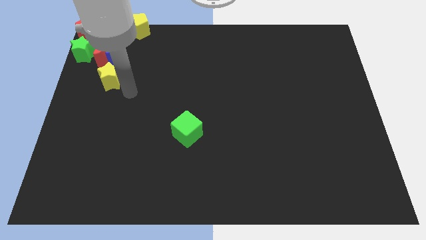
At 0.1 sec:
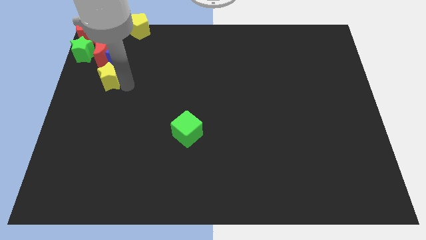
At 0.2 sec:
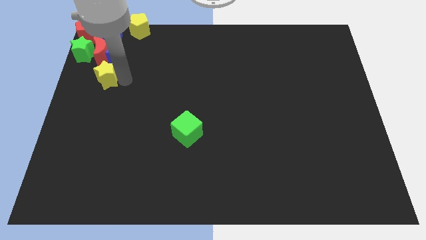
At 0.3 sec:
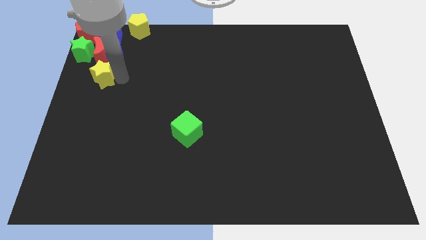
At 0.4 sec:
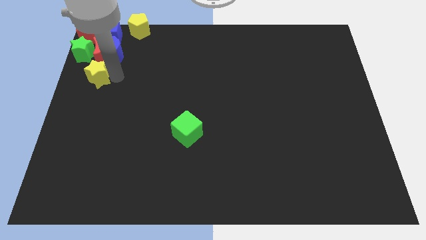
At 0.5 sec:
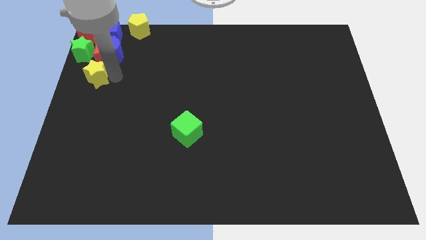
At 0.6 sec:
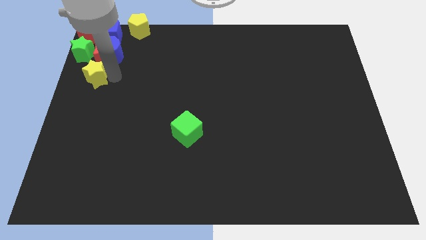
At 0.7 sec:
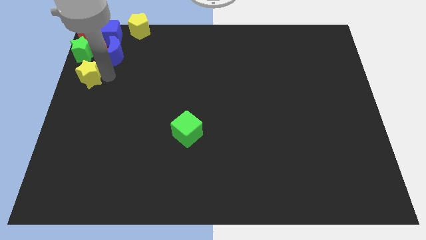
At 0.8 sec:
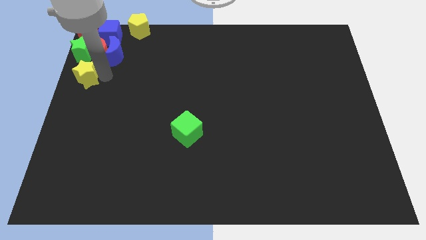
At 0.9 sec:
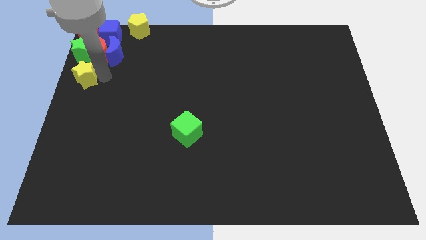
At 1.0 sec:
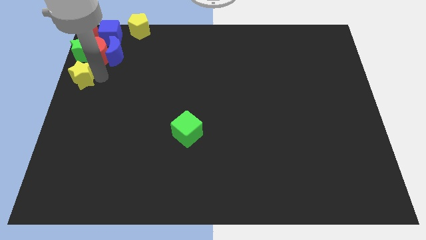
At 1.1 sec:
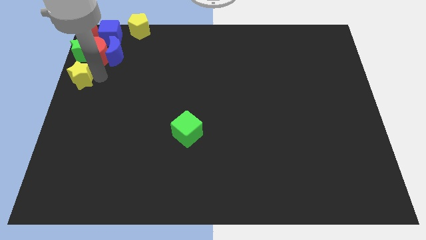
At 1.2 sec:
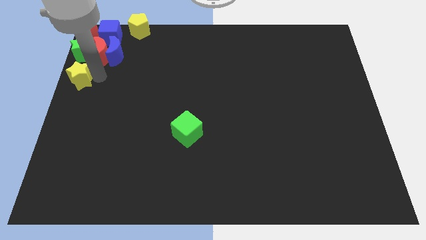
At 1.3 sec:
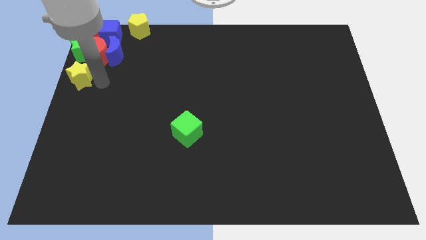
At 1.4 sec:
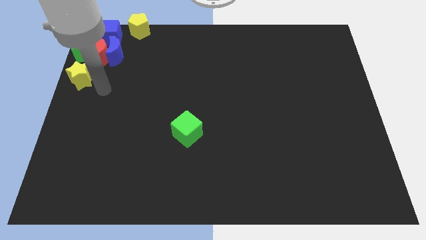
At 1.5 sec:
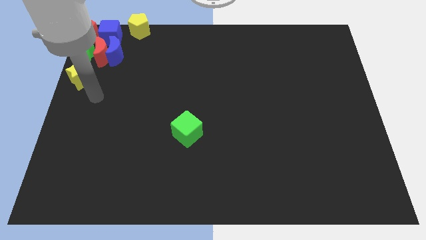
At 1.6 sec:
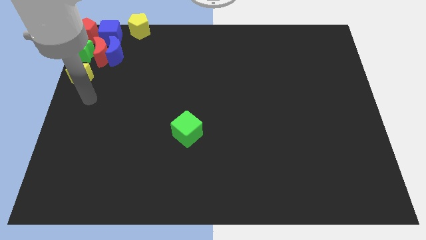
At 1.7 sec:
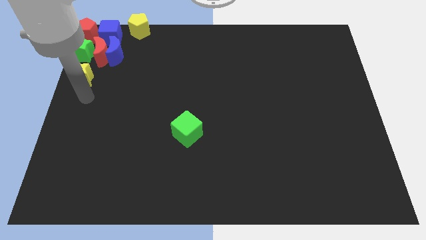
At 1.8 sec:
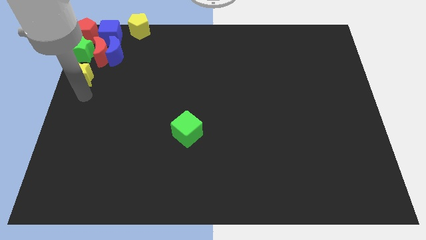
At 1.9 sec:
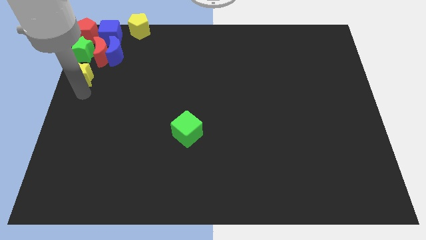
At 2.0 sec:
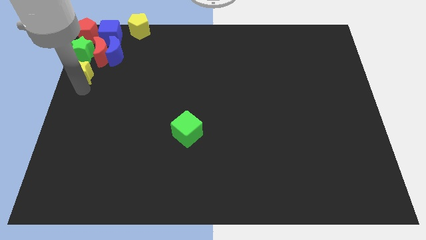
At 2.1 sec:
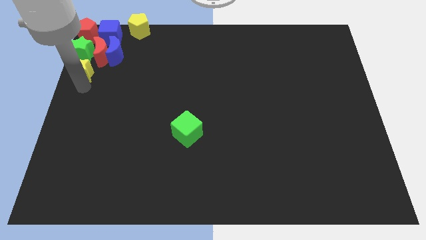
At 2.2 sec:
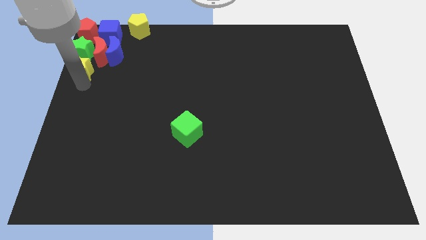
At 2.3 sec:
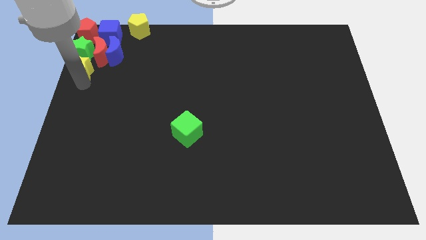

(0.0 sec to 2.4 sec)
place the yellow star below the green star

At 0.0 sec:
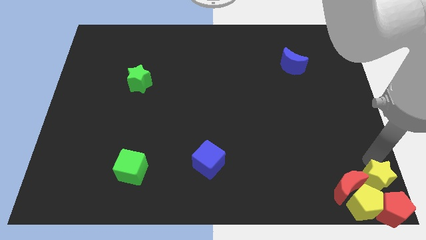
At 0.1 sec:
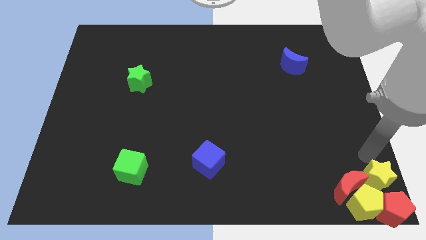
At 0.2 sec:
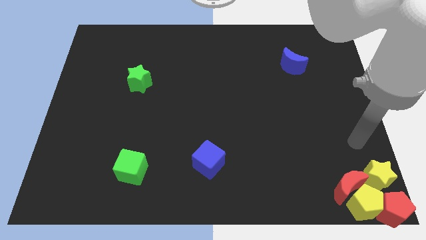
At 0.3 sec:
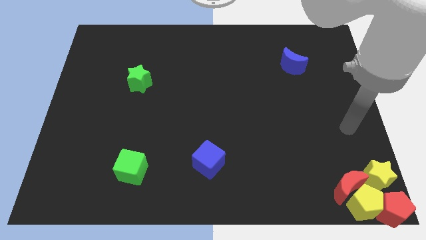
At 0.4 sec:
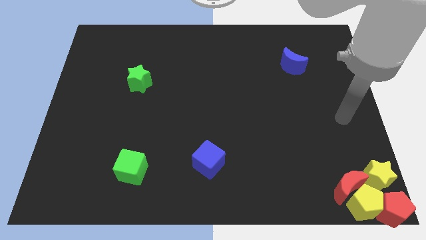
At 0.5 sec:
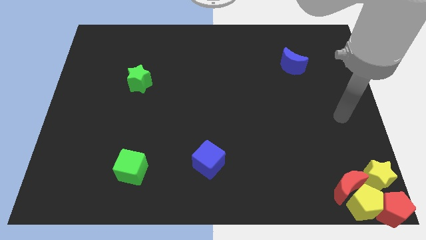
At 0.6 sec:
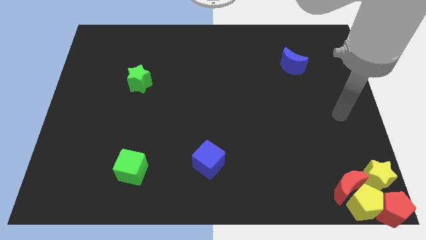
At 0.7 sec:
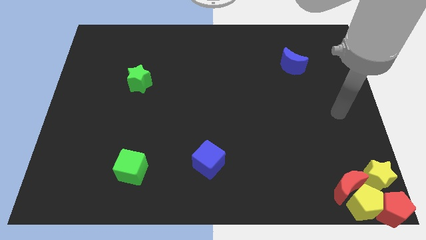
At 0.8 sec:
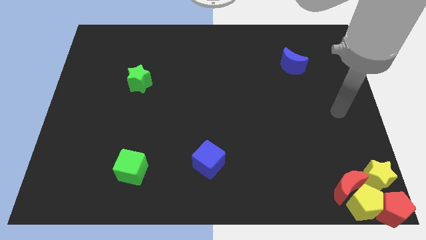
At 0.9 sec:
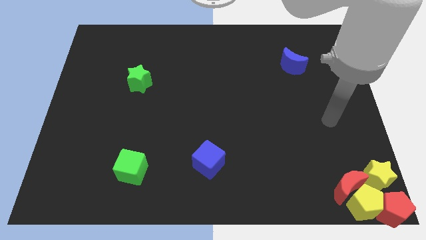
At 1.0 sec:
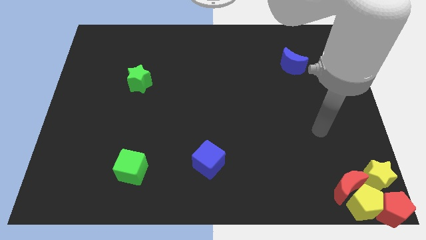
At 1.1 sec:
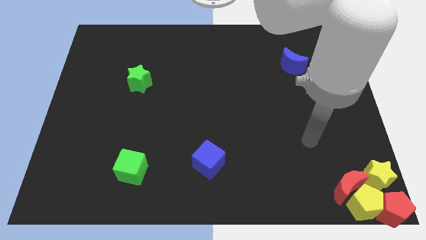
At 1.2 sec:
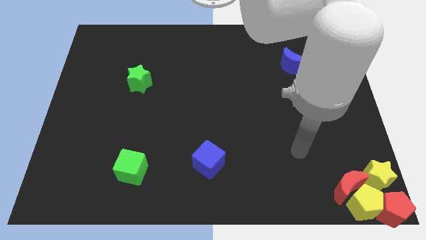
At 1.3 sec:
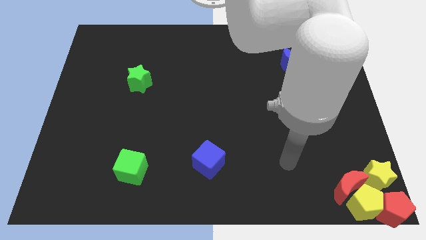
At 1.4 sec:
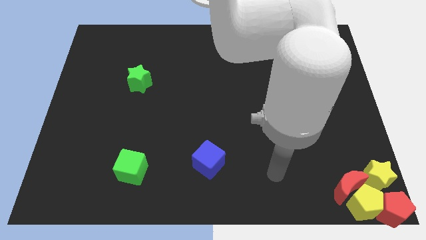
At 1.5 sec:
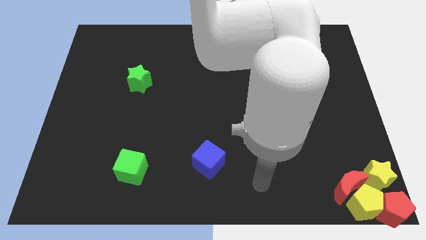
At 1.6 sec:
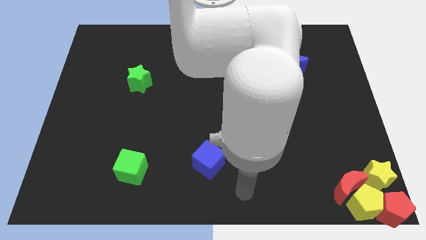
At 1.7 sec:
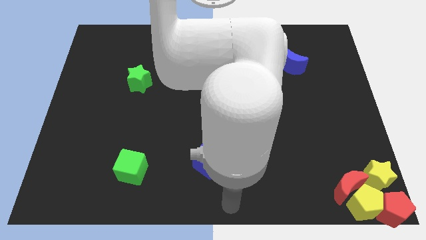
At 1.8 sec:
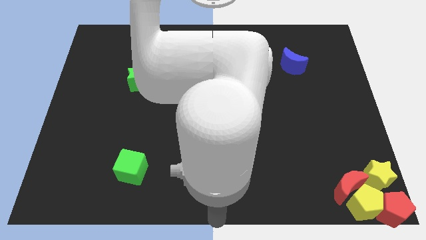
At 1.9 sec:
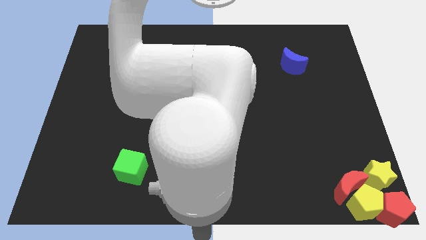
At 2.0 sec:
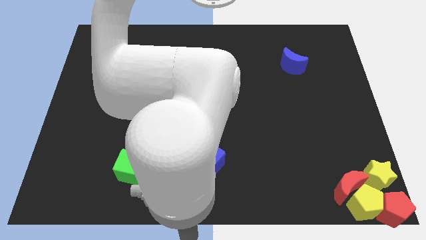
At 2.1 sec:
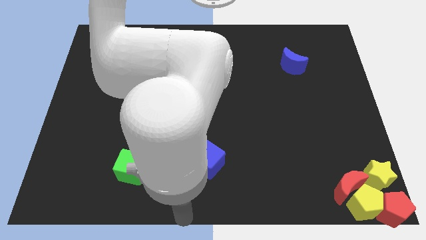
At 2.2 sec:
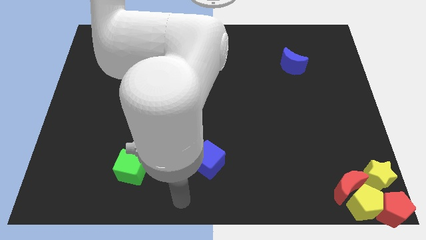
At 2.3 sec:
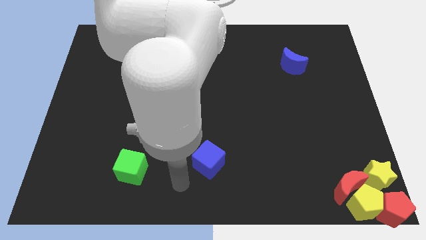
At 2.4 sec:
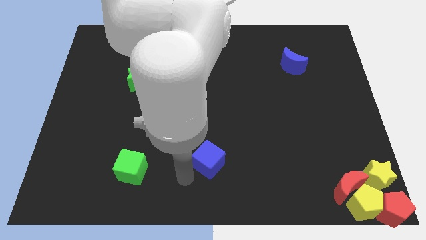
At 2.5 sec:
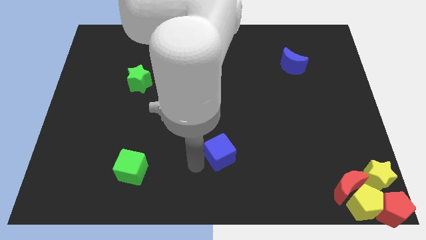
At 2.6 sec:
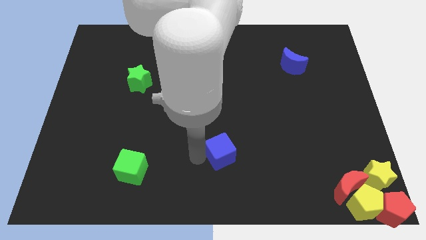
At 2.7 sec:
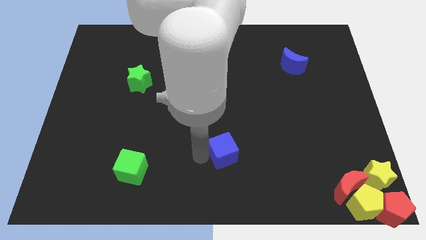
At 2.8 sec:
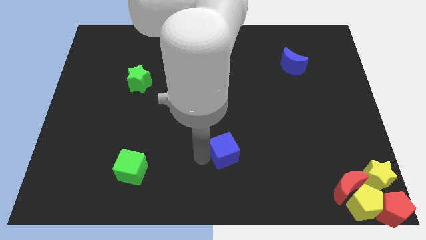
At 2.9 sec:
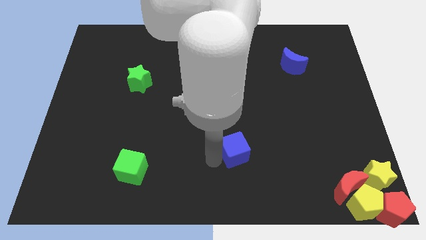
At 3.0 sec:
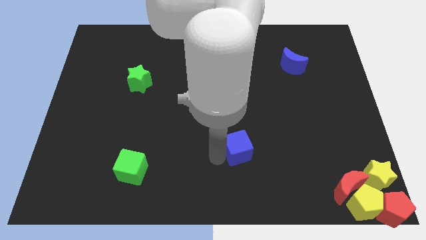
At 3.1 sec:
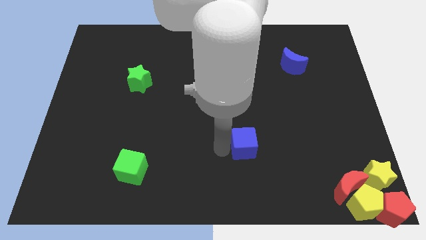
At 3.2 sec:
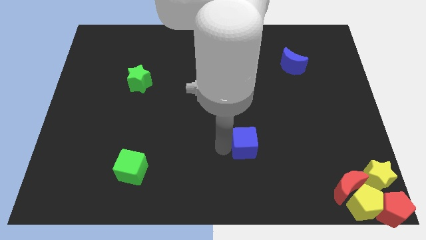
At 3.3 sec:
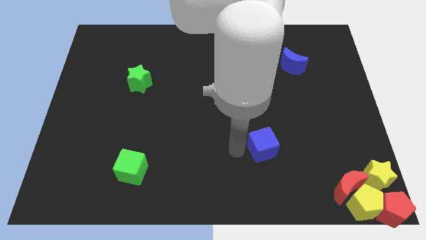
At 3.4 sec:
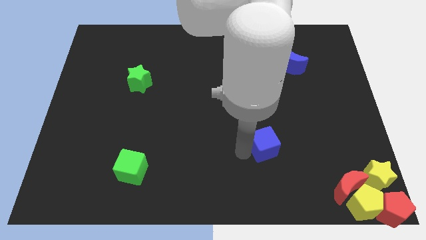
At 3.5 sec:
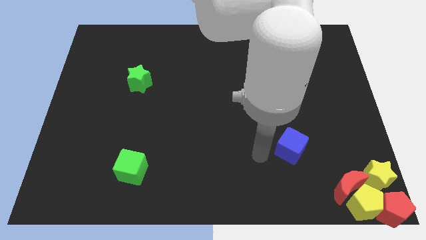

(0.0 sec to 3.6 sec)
move the blue cube to the top left of the red crescent

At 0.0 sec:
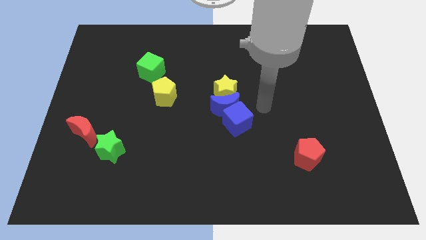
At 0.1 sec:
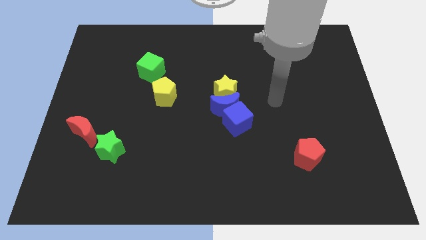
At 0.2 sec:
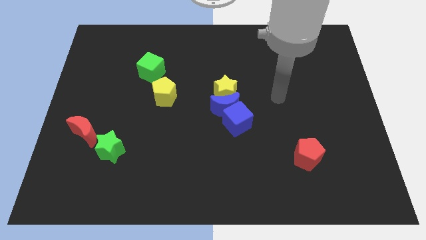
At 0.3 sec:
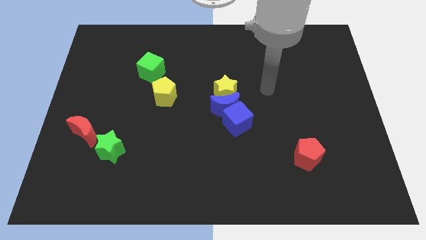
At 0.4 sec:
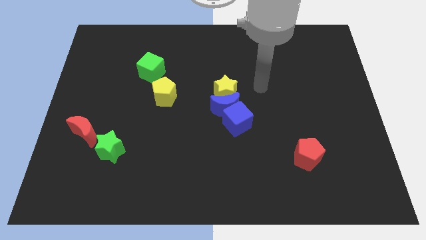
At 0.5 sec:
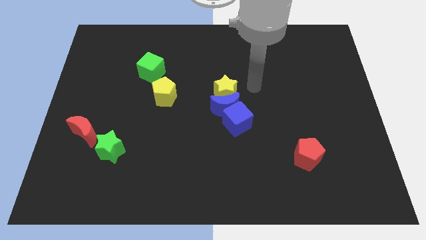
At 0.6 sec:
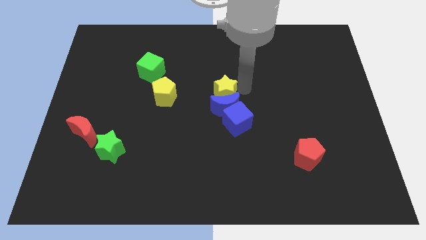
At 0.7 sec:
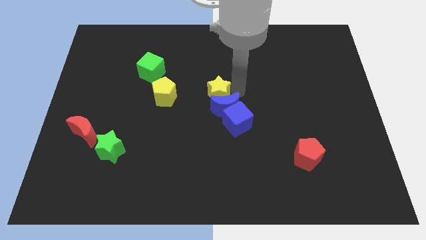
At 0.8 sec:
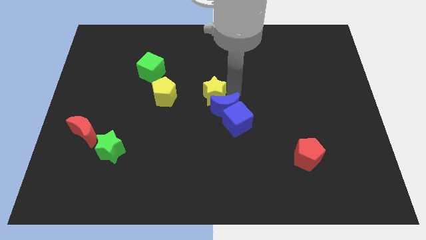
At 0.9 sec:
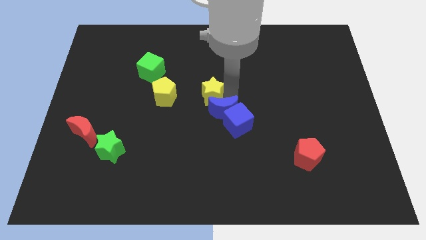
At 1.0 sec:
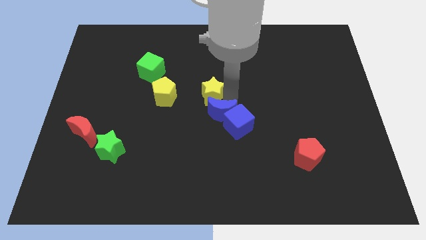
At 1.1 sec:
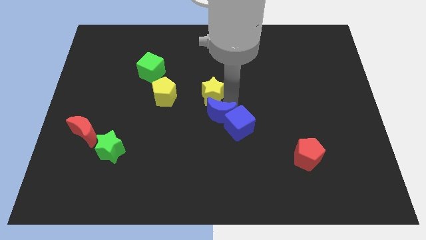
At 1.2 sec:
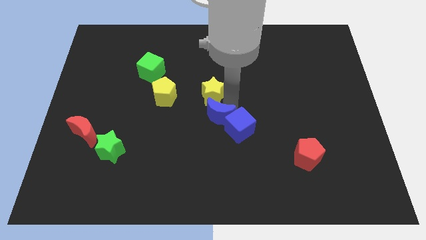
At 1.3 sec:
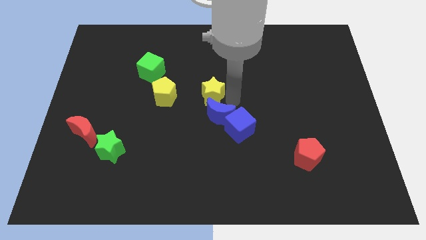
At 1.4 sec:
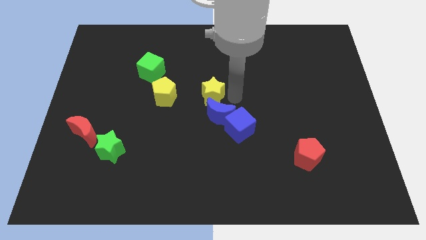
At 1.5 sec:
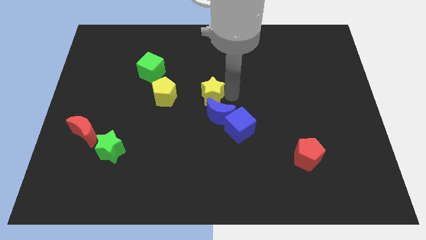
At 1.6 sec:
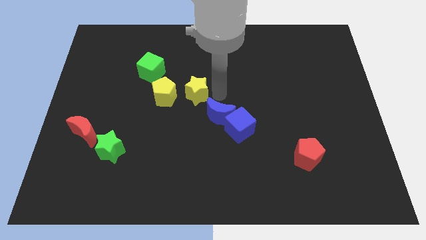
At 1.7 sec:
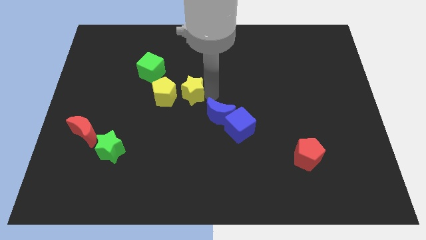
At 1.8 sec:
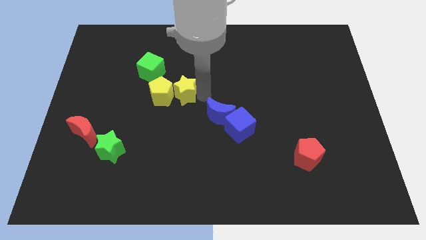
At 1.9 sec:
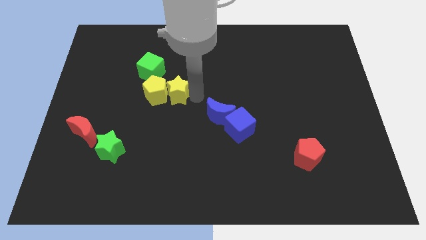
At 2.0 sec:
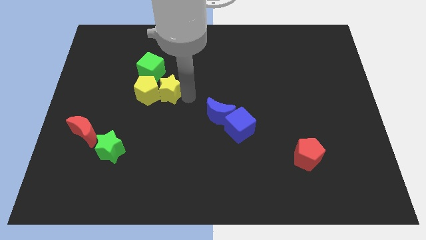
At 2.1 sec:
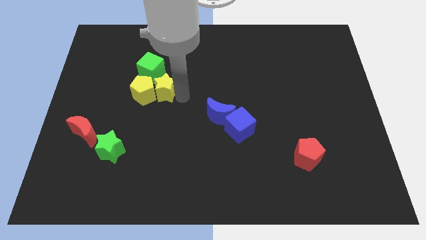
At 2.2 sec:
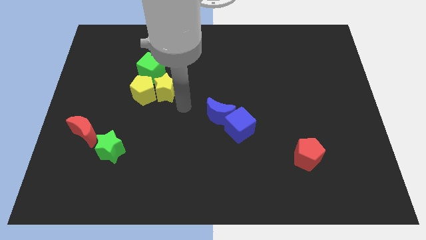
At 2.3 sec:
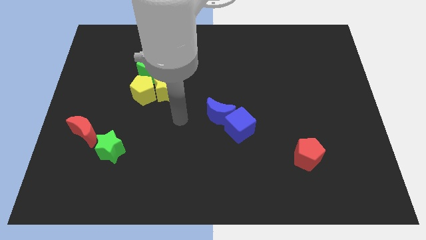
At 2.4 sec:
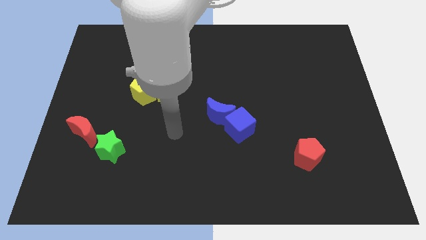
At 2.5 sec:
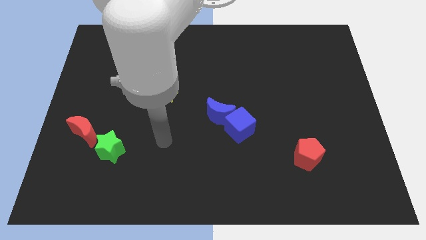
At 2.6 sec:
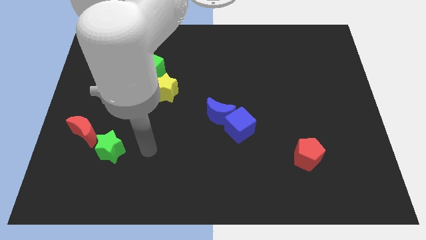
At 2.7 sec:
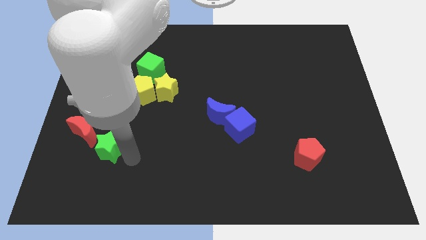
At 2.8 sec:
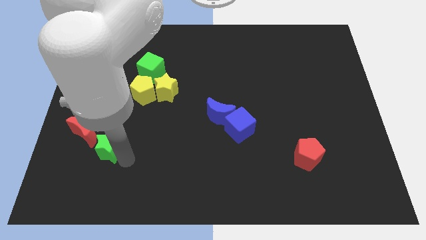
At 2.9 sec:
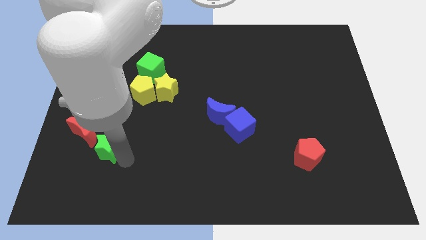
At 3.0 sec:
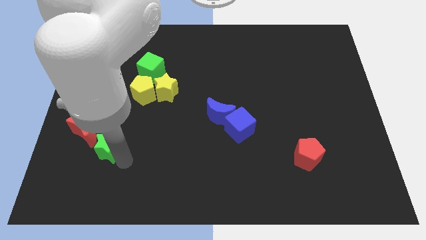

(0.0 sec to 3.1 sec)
move yellow star into yellow pentagon
